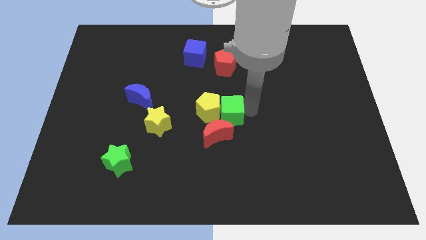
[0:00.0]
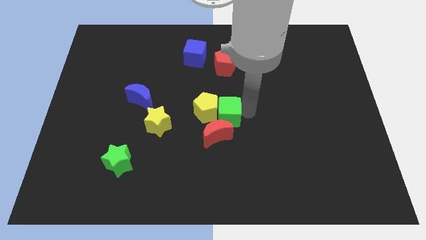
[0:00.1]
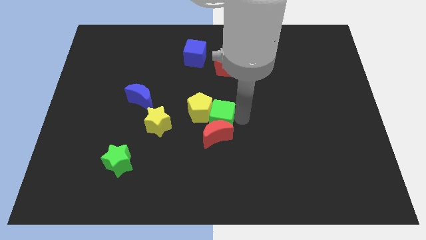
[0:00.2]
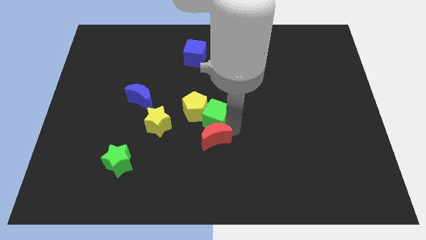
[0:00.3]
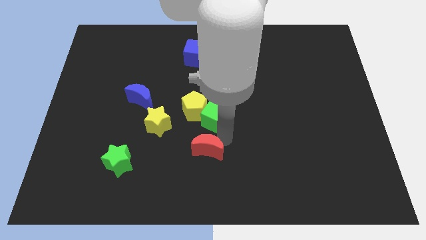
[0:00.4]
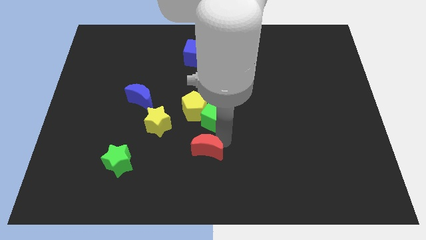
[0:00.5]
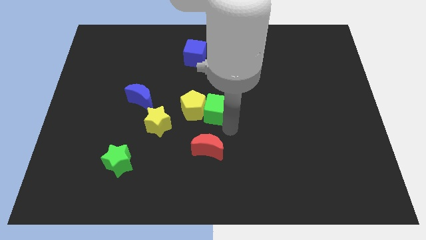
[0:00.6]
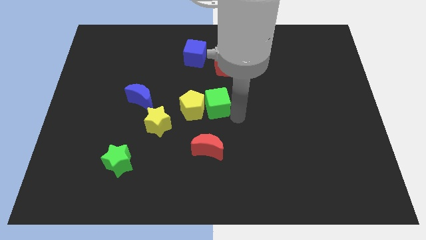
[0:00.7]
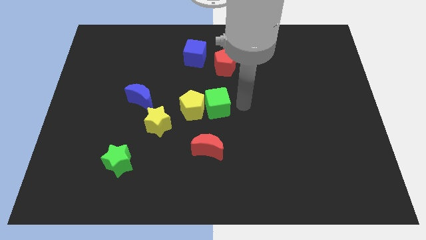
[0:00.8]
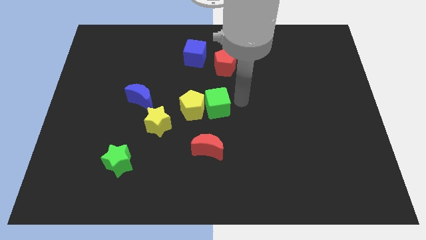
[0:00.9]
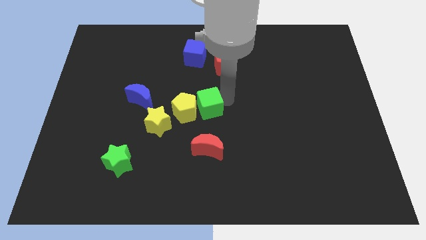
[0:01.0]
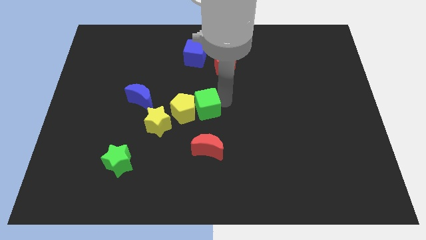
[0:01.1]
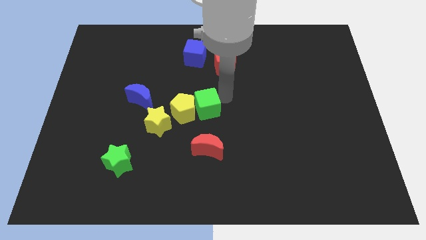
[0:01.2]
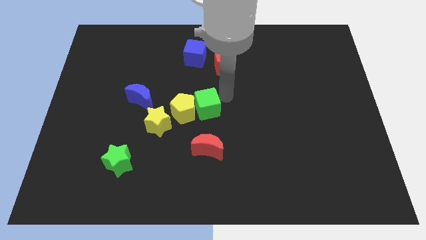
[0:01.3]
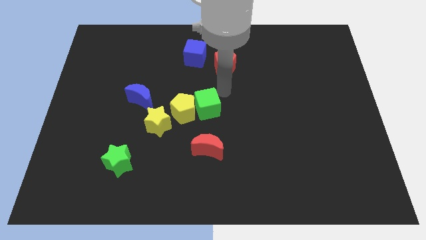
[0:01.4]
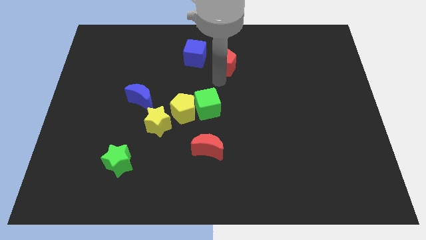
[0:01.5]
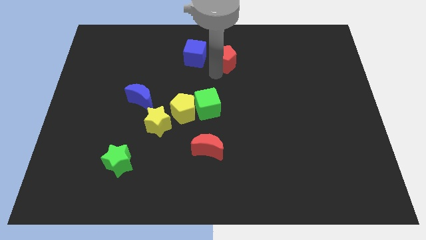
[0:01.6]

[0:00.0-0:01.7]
separate the red moon from the green cube

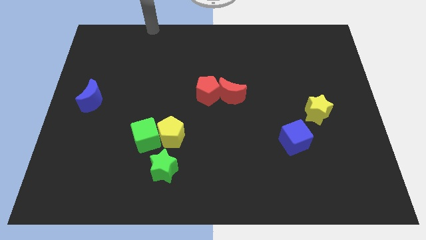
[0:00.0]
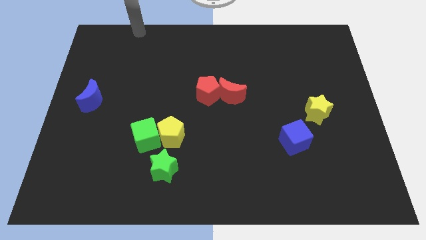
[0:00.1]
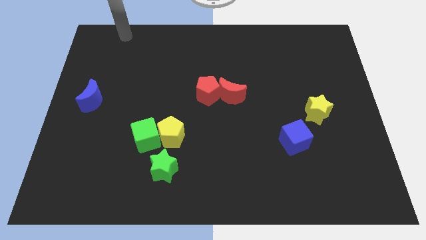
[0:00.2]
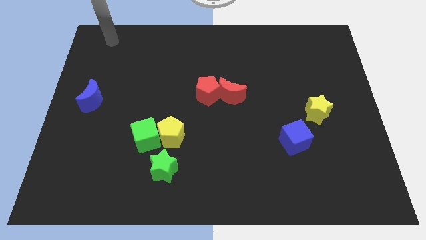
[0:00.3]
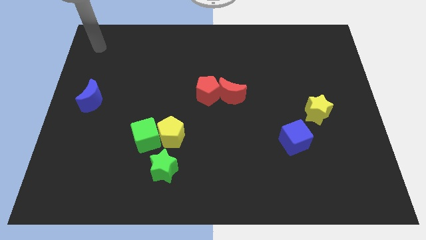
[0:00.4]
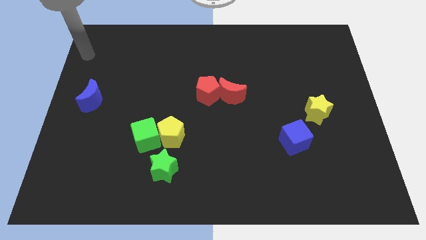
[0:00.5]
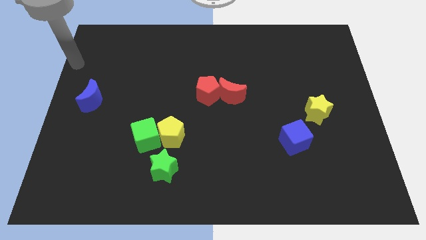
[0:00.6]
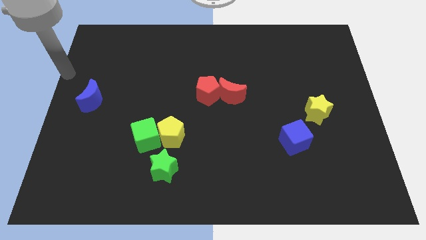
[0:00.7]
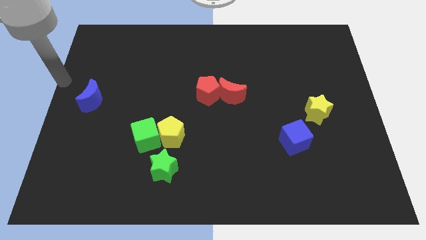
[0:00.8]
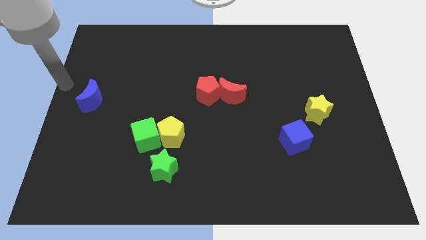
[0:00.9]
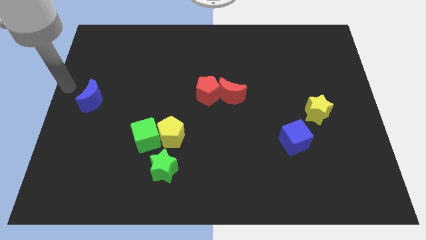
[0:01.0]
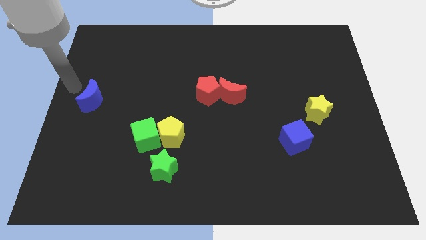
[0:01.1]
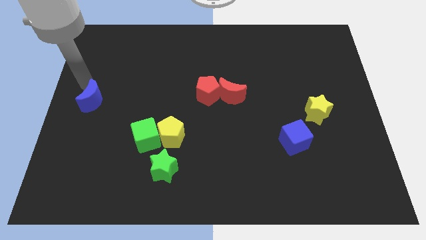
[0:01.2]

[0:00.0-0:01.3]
move the arm to the left of blue crescent

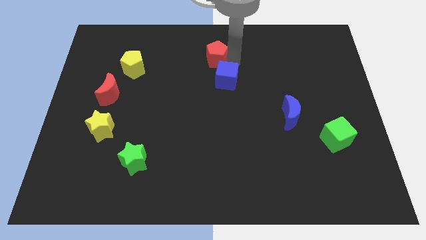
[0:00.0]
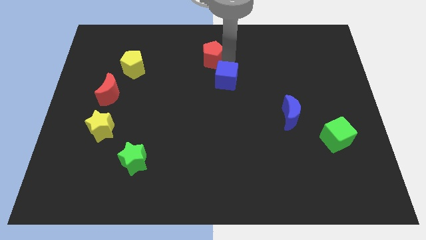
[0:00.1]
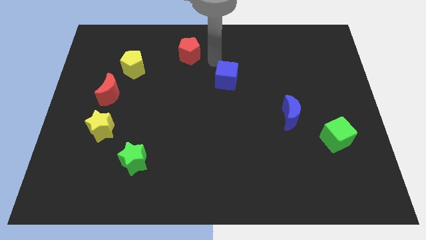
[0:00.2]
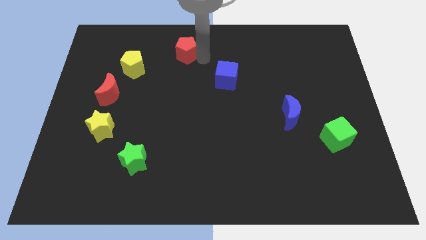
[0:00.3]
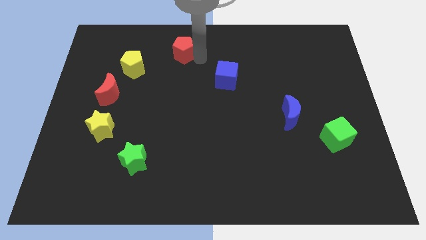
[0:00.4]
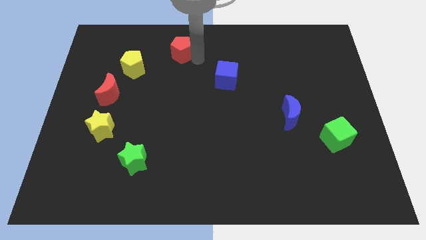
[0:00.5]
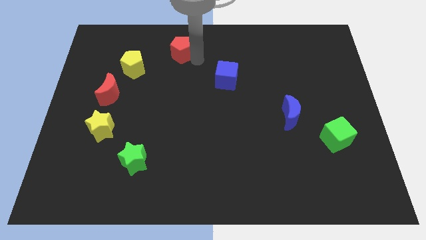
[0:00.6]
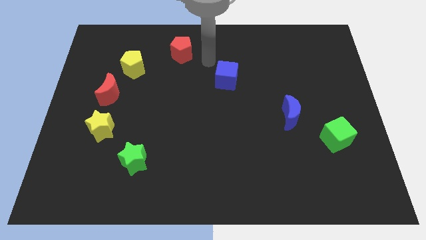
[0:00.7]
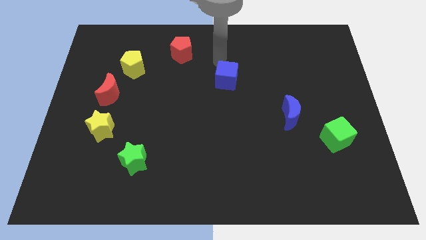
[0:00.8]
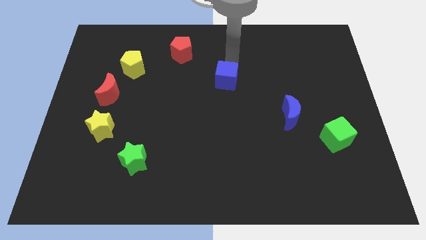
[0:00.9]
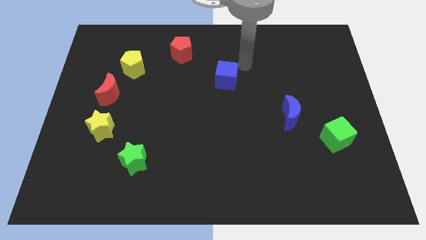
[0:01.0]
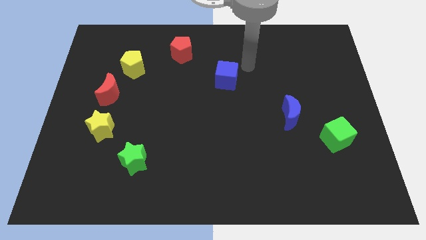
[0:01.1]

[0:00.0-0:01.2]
slightly push the red pentagon towards the yellow pentagon to form a circle

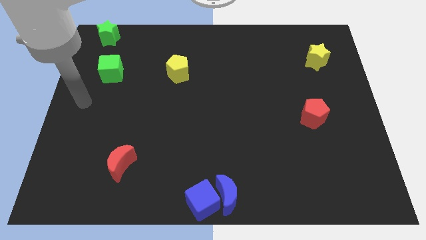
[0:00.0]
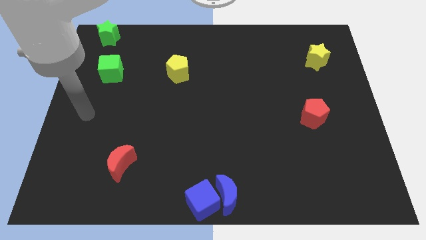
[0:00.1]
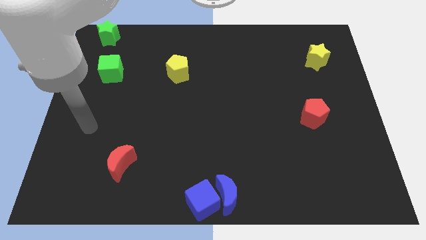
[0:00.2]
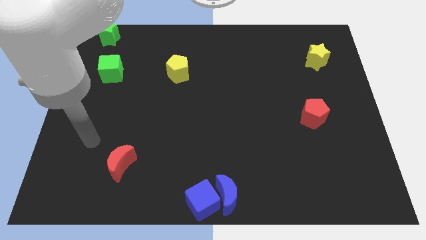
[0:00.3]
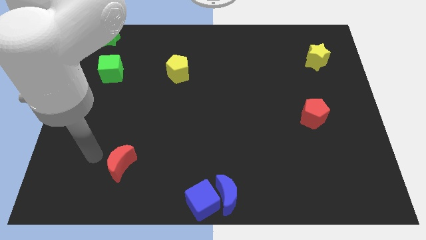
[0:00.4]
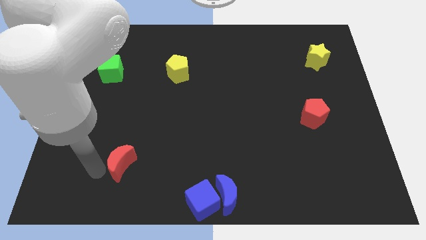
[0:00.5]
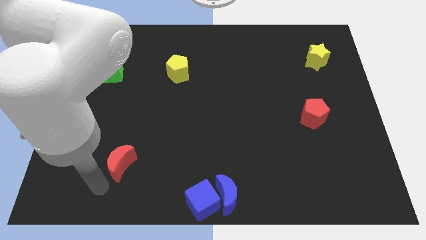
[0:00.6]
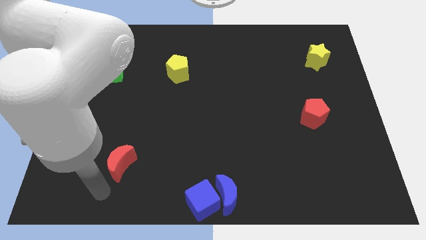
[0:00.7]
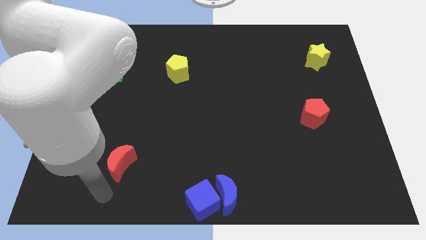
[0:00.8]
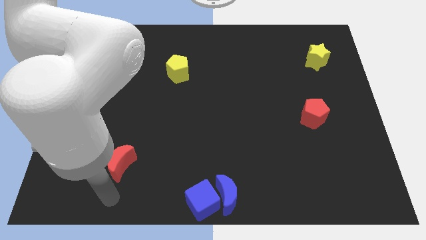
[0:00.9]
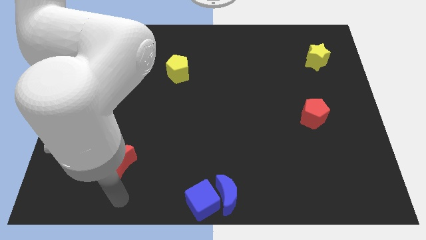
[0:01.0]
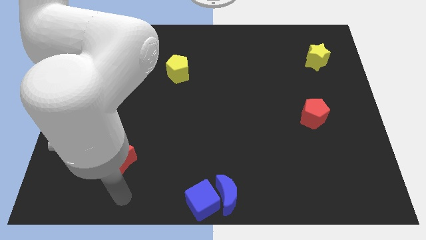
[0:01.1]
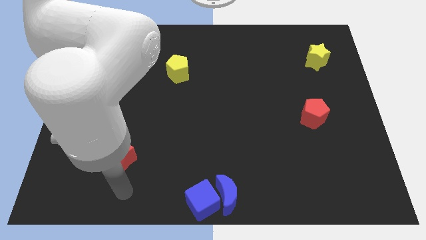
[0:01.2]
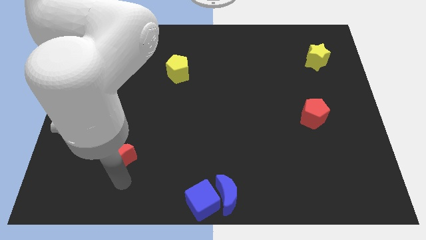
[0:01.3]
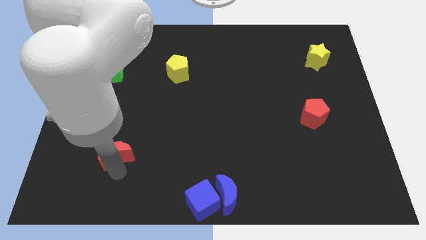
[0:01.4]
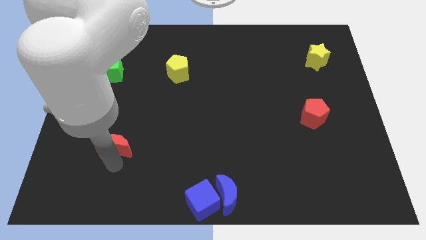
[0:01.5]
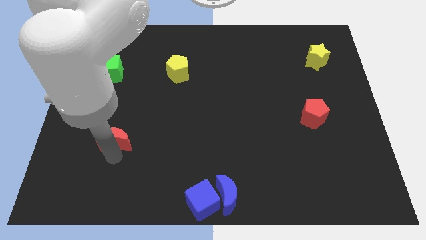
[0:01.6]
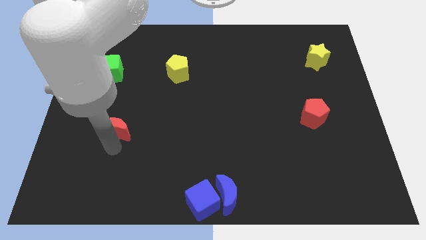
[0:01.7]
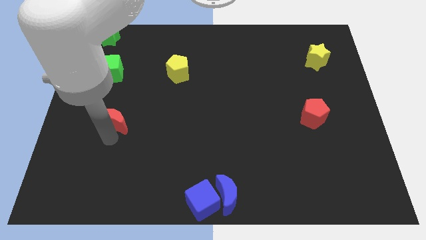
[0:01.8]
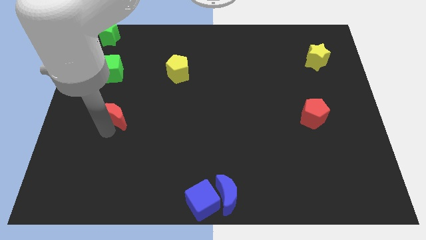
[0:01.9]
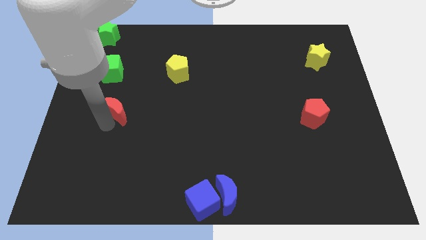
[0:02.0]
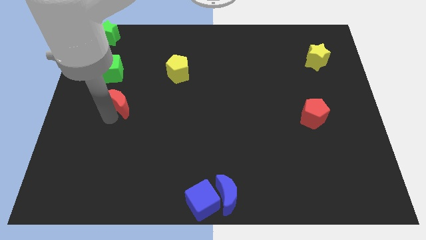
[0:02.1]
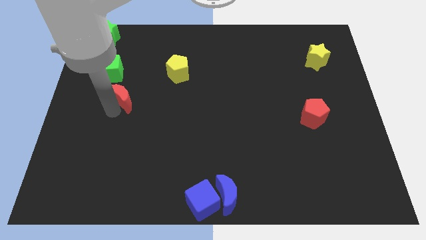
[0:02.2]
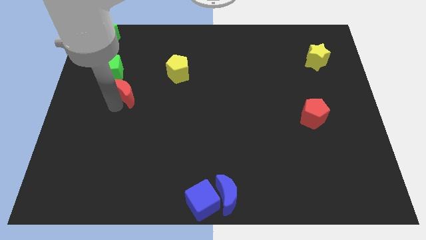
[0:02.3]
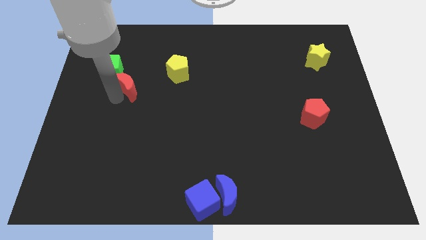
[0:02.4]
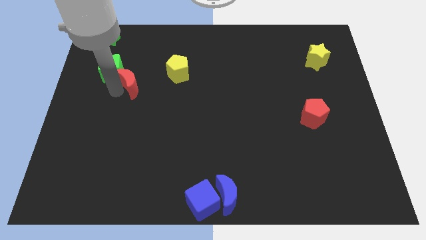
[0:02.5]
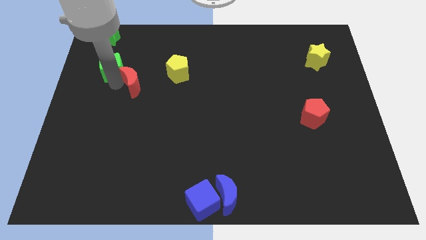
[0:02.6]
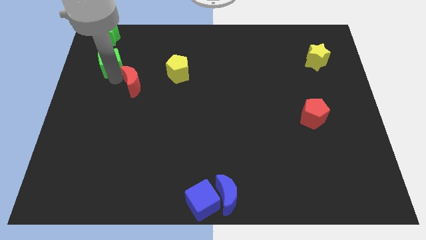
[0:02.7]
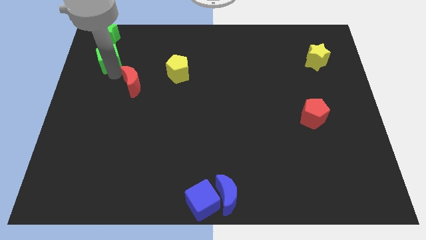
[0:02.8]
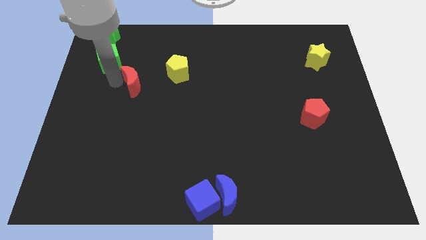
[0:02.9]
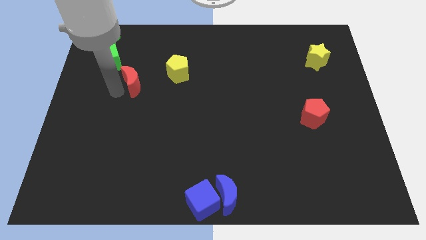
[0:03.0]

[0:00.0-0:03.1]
place red moon to bottom right of green cube

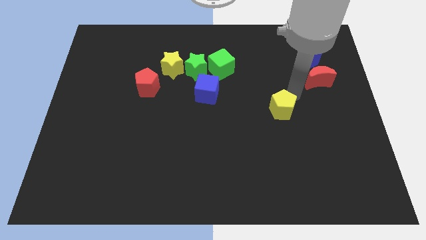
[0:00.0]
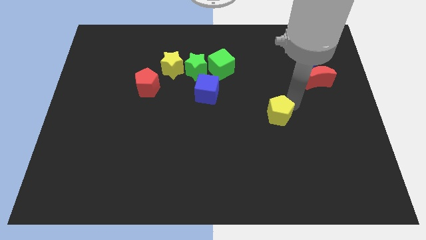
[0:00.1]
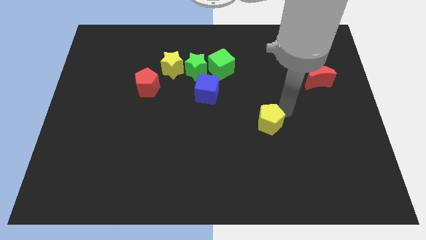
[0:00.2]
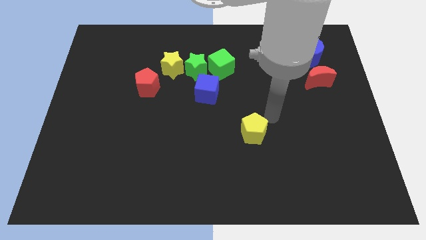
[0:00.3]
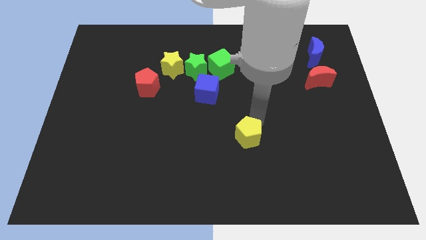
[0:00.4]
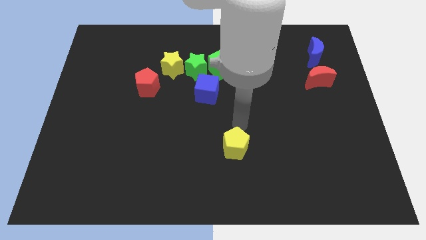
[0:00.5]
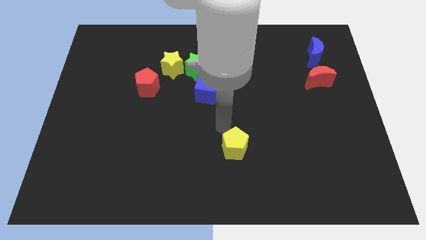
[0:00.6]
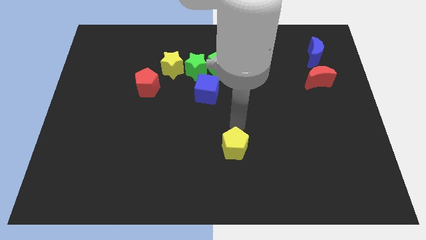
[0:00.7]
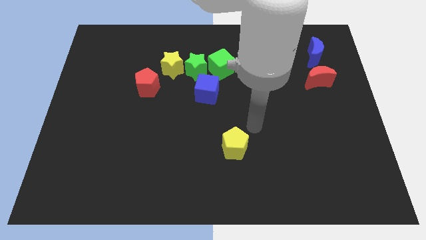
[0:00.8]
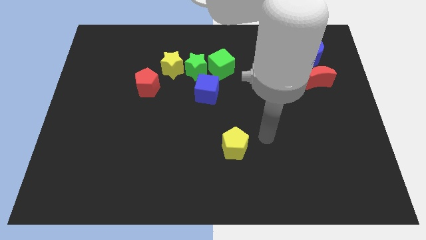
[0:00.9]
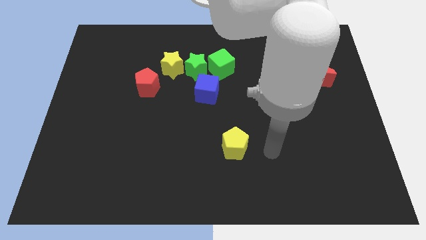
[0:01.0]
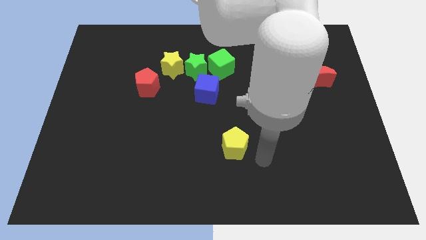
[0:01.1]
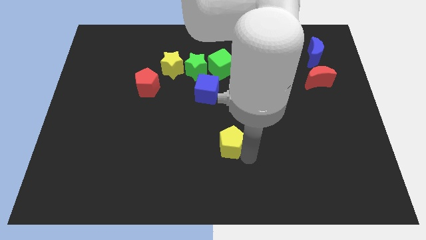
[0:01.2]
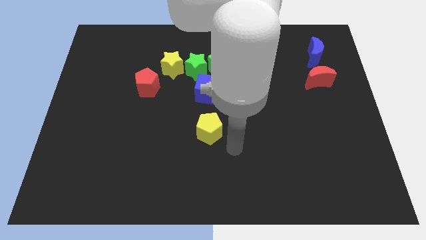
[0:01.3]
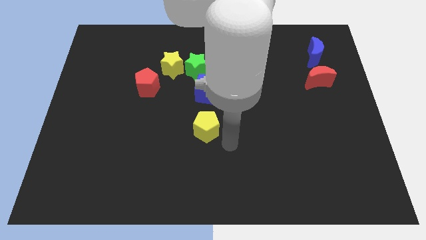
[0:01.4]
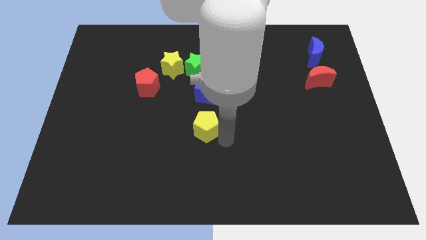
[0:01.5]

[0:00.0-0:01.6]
push the yellow pentagon below the blue cube
